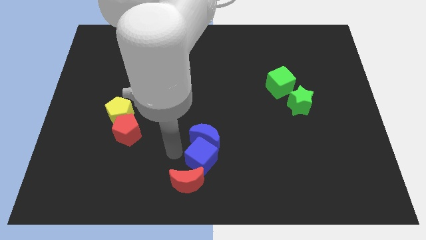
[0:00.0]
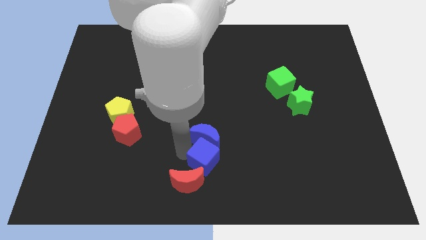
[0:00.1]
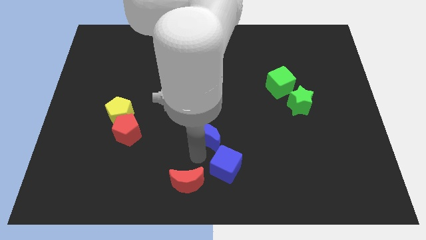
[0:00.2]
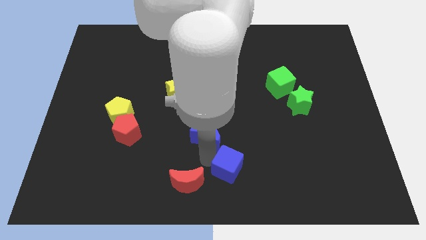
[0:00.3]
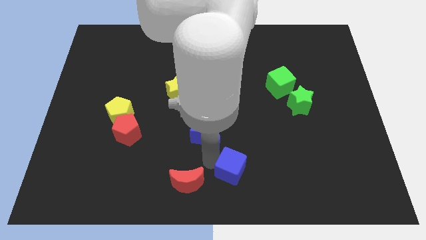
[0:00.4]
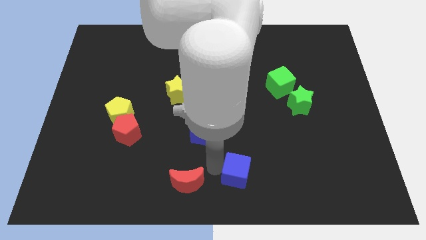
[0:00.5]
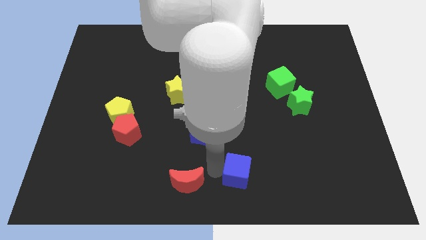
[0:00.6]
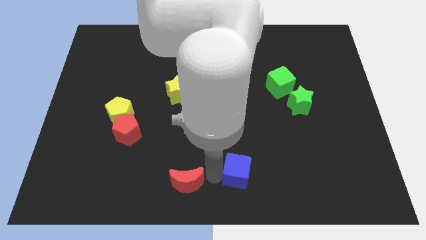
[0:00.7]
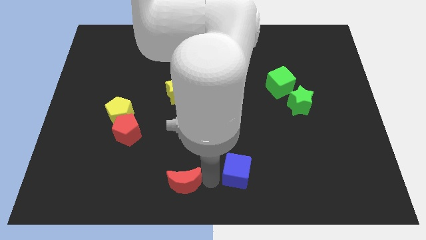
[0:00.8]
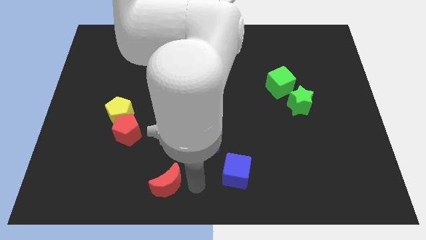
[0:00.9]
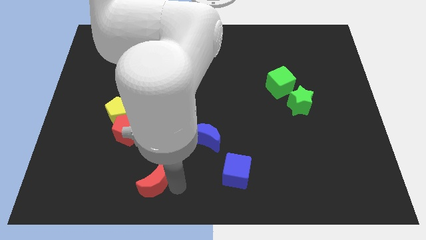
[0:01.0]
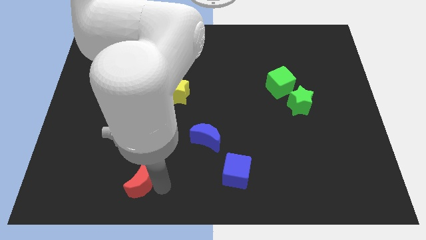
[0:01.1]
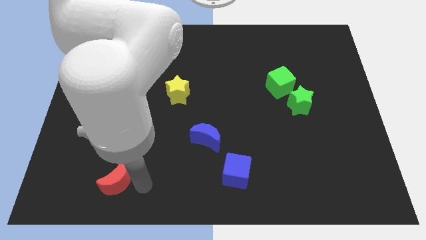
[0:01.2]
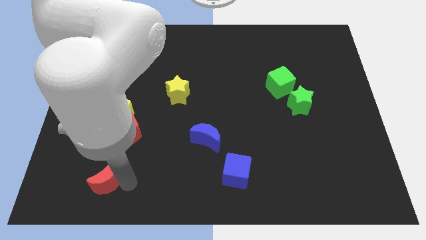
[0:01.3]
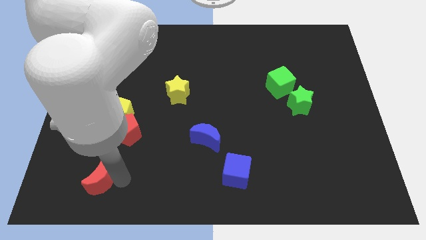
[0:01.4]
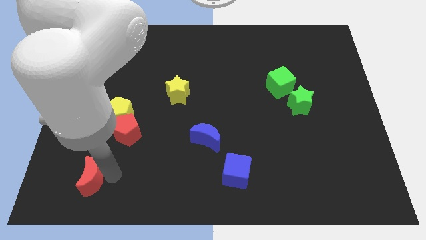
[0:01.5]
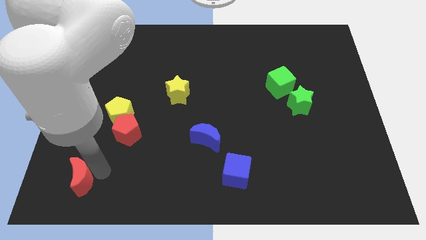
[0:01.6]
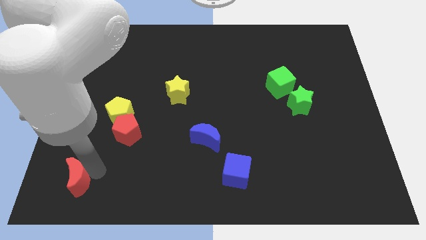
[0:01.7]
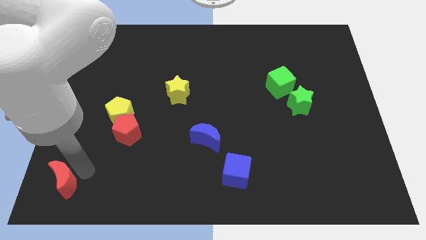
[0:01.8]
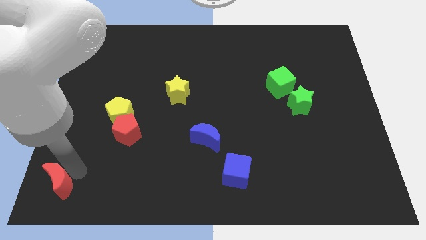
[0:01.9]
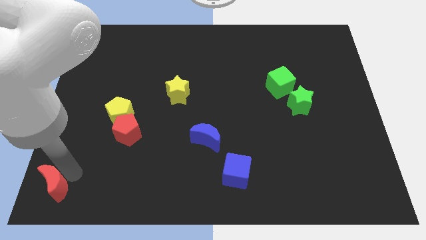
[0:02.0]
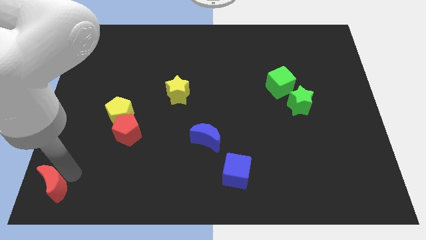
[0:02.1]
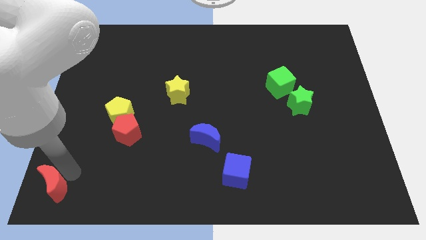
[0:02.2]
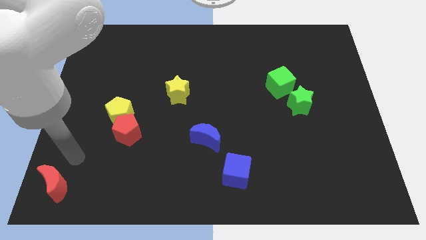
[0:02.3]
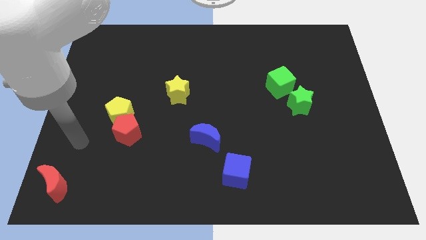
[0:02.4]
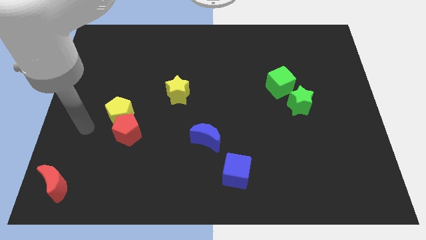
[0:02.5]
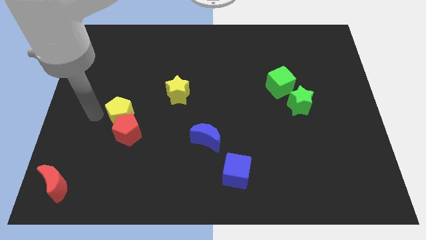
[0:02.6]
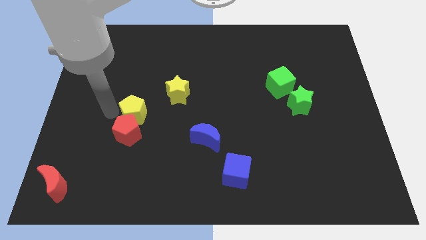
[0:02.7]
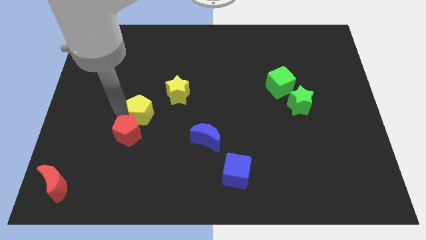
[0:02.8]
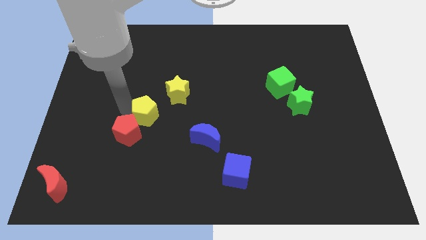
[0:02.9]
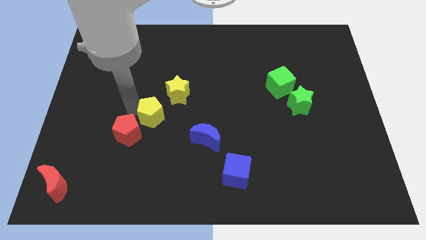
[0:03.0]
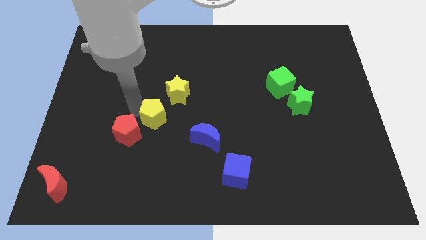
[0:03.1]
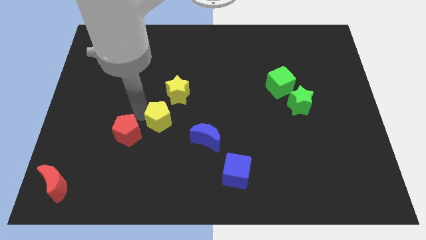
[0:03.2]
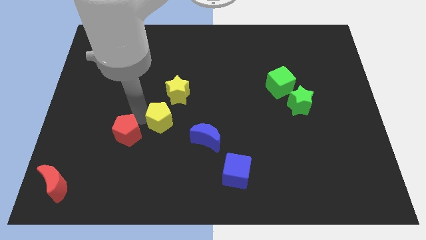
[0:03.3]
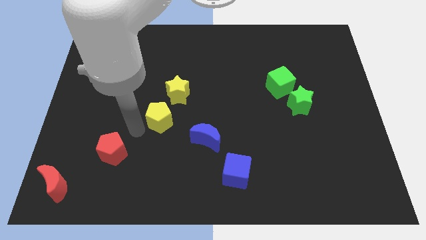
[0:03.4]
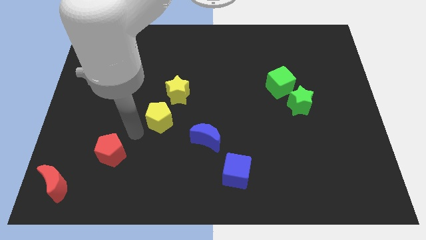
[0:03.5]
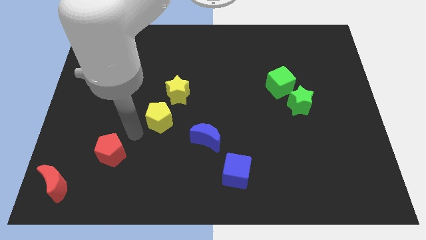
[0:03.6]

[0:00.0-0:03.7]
separate the red pentagon and yellow pentagon

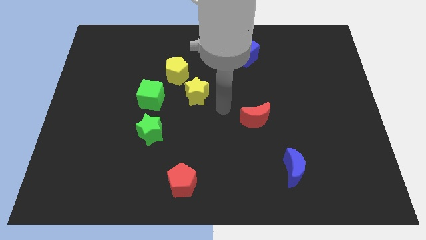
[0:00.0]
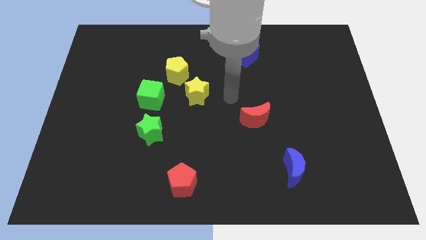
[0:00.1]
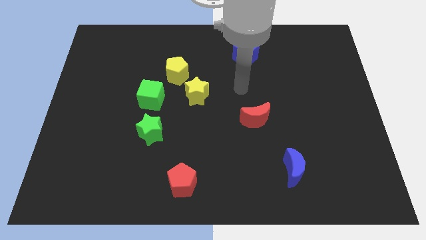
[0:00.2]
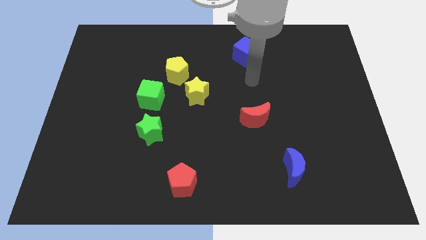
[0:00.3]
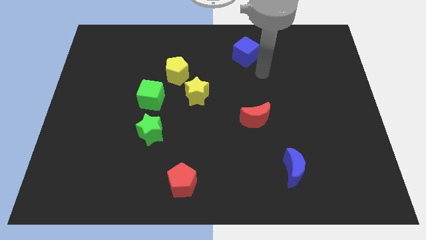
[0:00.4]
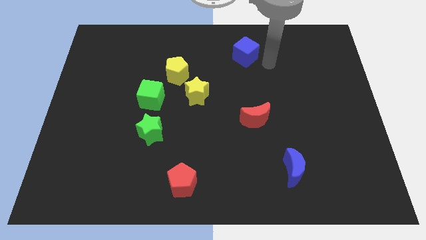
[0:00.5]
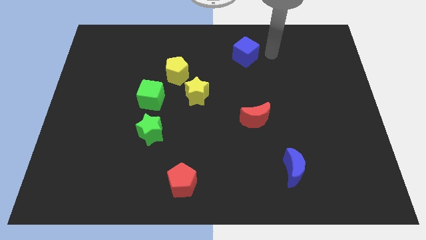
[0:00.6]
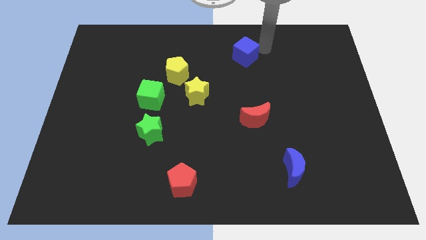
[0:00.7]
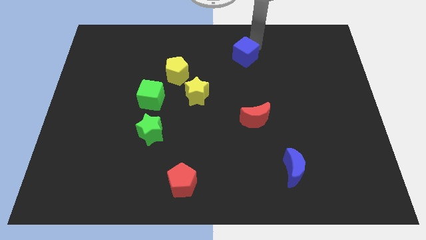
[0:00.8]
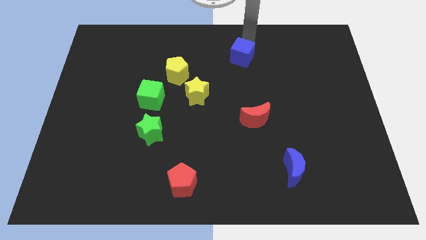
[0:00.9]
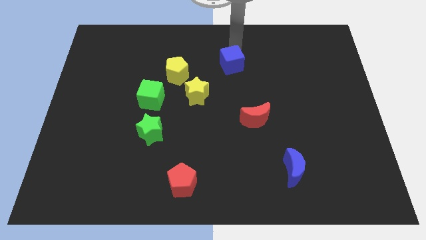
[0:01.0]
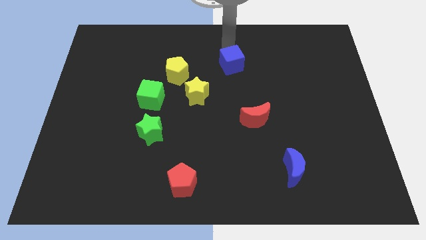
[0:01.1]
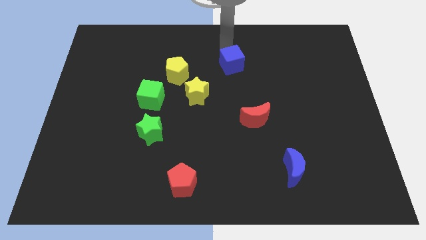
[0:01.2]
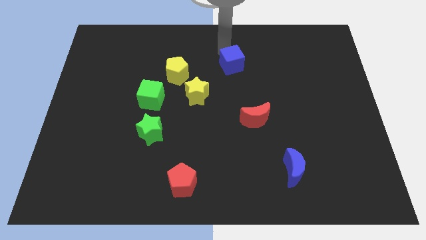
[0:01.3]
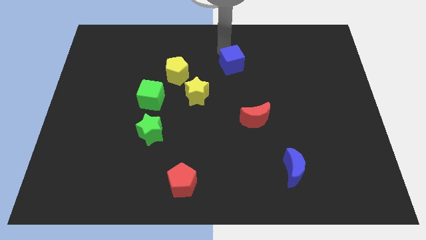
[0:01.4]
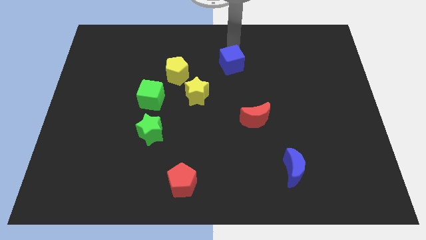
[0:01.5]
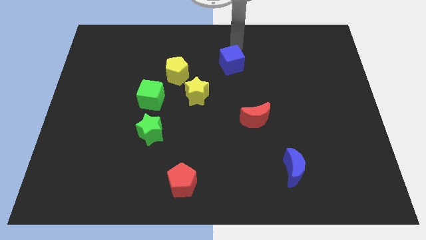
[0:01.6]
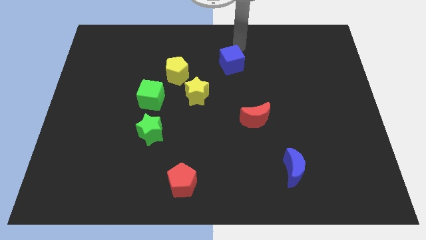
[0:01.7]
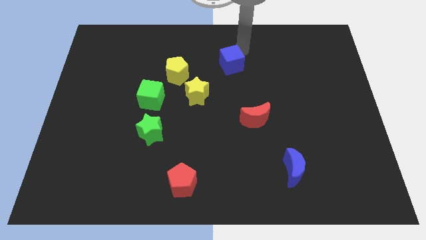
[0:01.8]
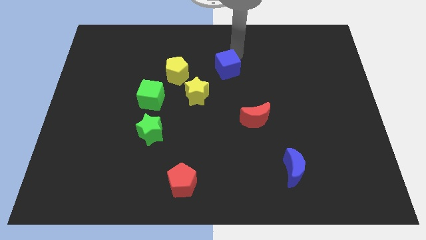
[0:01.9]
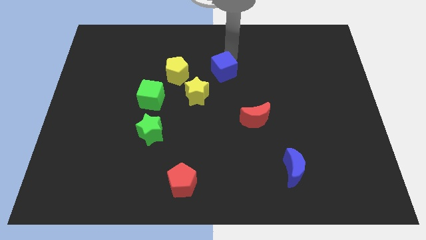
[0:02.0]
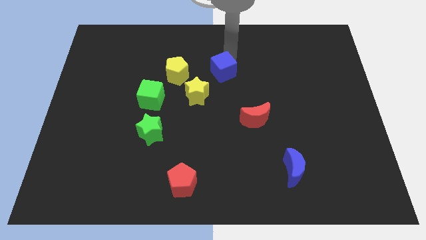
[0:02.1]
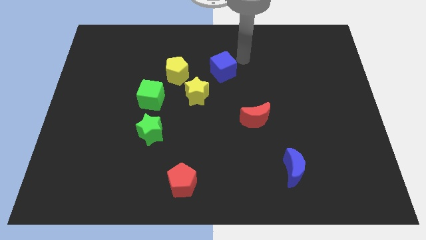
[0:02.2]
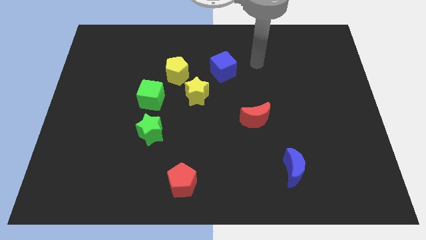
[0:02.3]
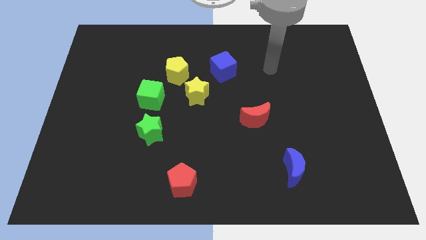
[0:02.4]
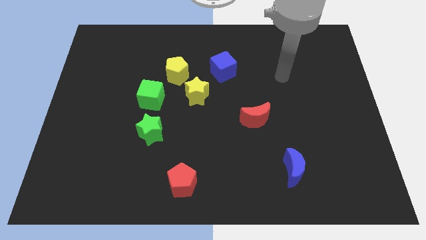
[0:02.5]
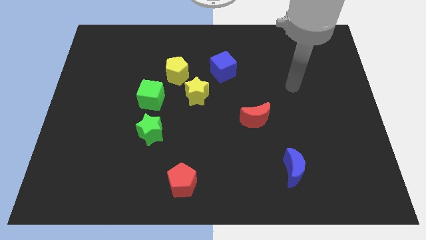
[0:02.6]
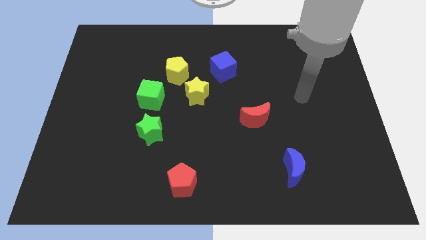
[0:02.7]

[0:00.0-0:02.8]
push blue cube near yellow blocks

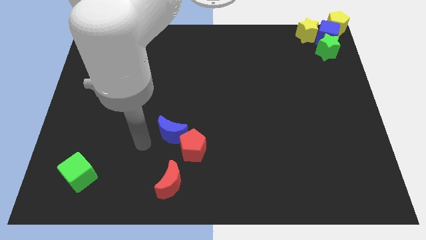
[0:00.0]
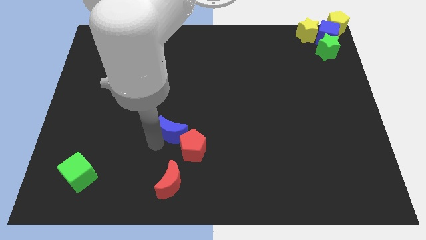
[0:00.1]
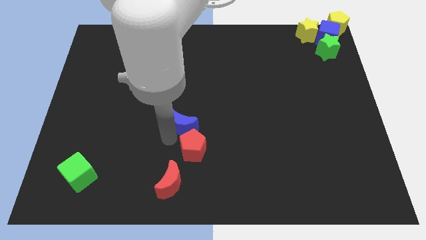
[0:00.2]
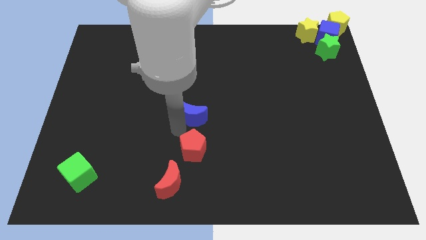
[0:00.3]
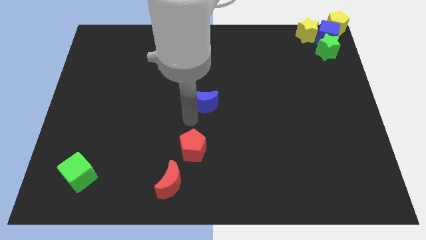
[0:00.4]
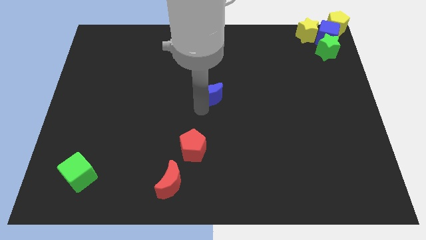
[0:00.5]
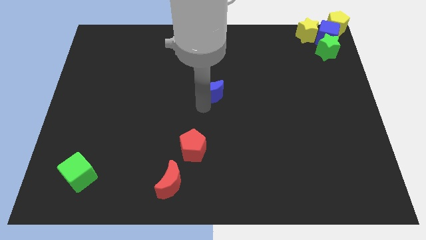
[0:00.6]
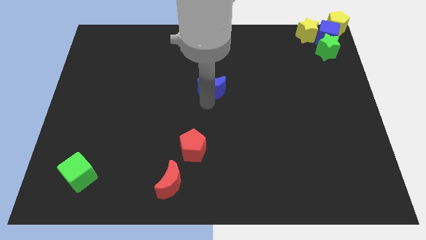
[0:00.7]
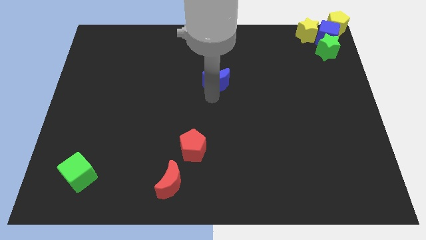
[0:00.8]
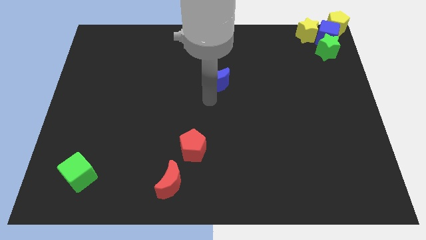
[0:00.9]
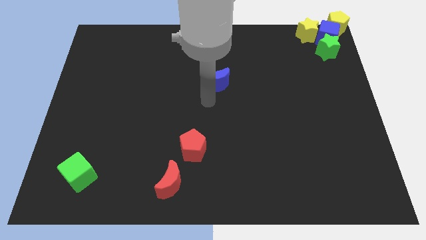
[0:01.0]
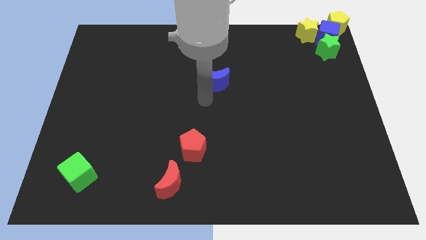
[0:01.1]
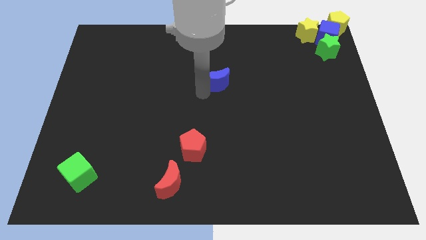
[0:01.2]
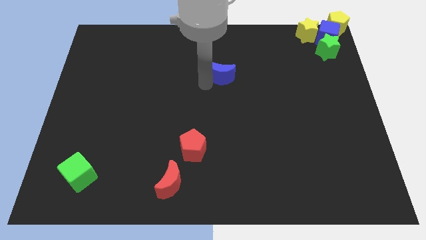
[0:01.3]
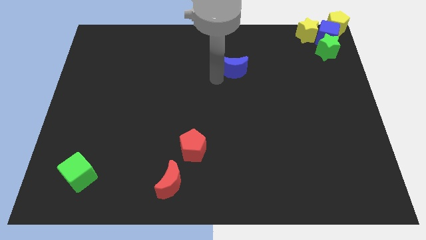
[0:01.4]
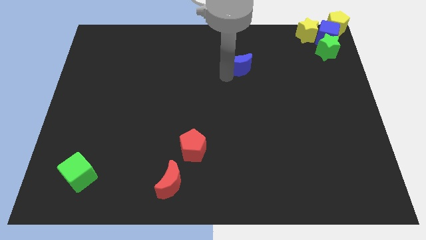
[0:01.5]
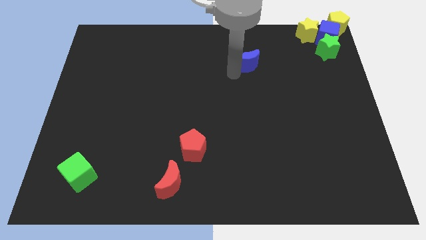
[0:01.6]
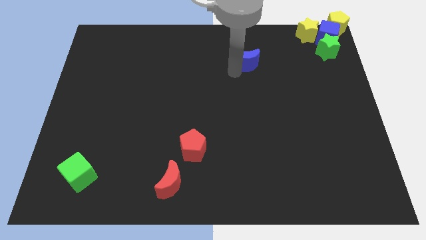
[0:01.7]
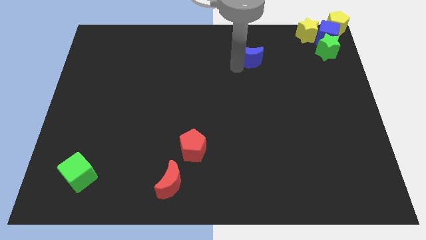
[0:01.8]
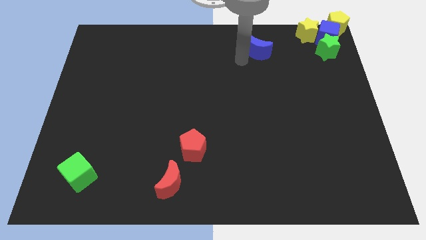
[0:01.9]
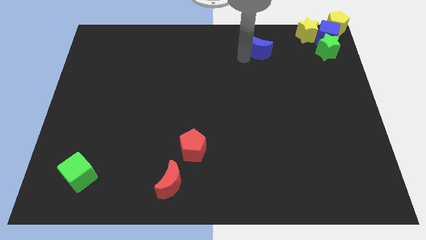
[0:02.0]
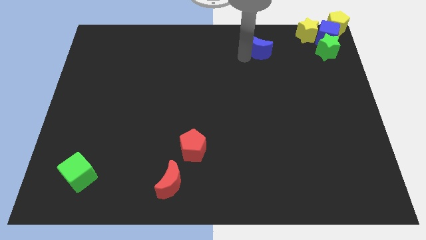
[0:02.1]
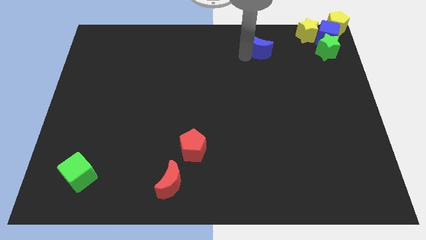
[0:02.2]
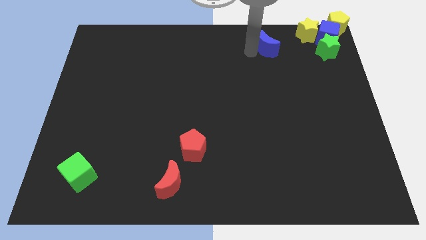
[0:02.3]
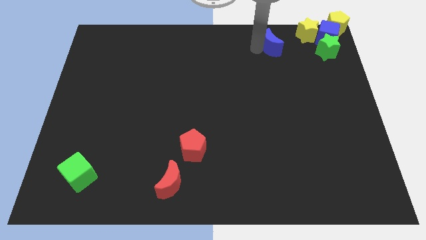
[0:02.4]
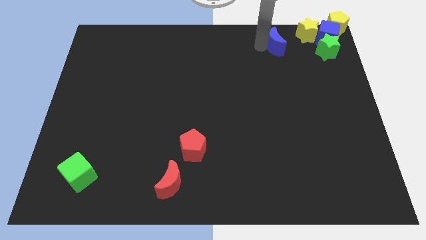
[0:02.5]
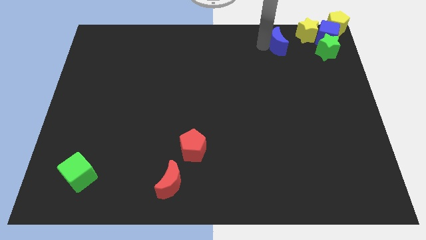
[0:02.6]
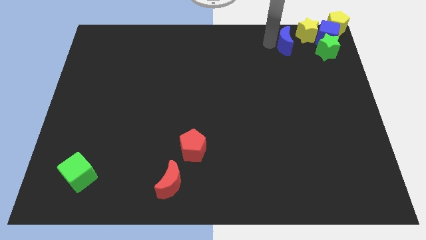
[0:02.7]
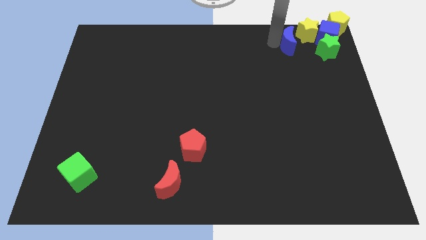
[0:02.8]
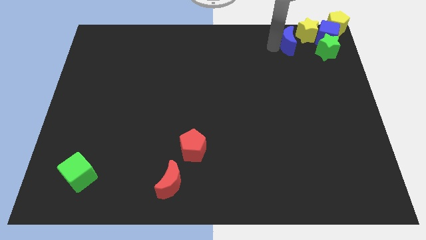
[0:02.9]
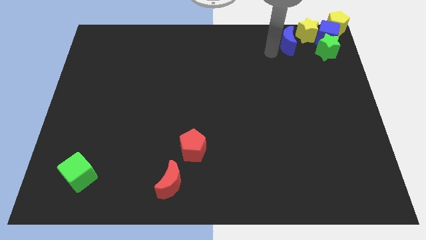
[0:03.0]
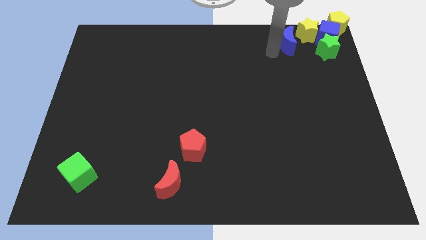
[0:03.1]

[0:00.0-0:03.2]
slide blue crescent close to yellow star
